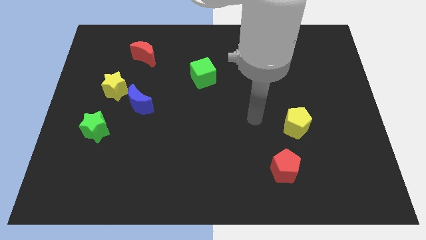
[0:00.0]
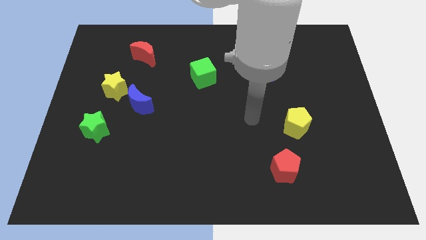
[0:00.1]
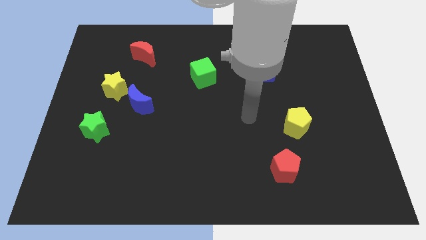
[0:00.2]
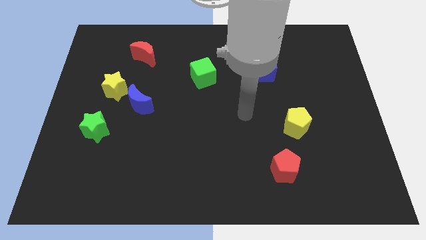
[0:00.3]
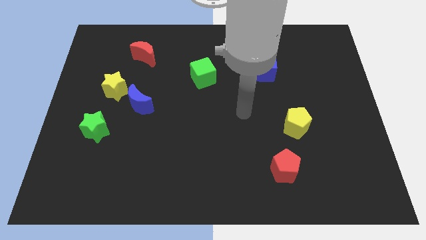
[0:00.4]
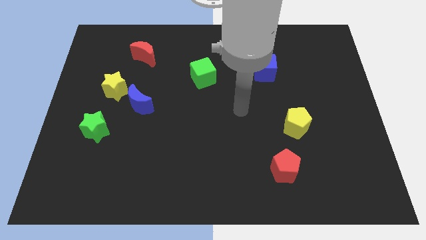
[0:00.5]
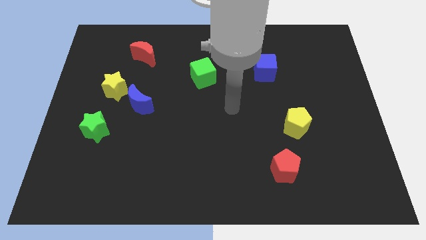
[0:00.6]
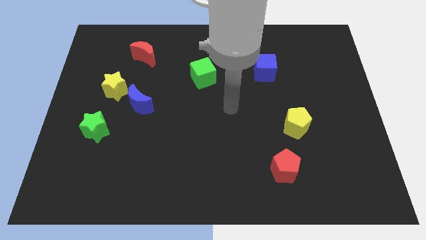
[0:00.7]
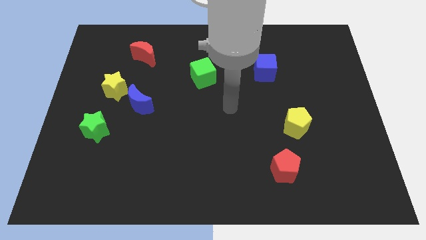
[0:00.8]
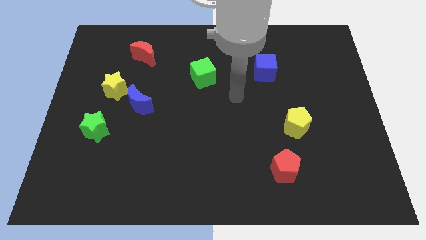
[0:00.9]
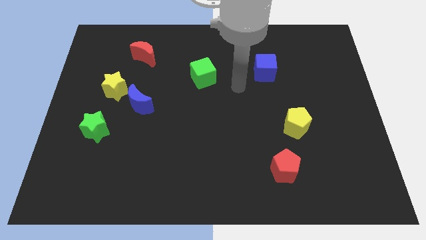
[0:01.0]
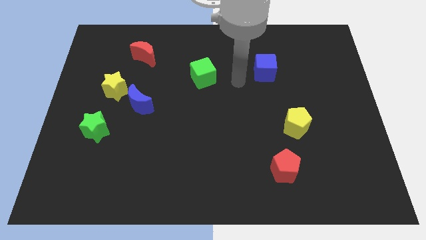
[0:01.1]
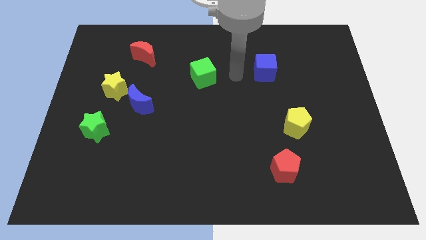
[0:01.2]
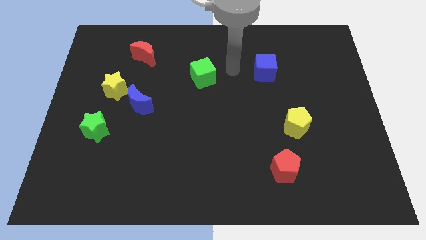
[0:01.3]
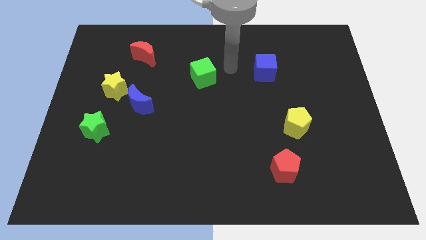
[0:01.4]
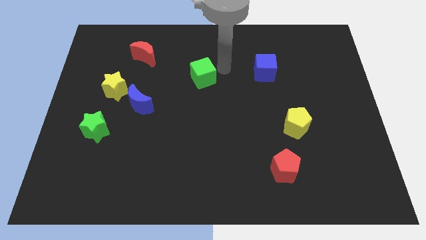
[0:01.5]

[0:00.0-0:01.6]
move your arm towards the green cube

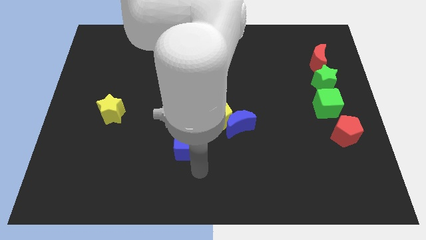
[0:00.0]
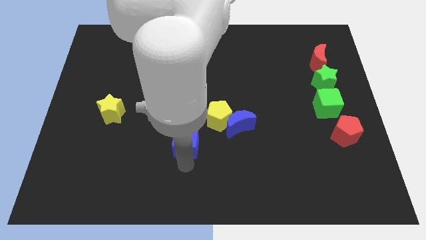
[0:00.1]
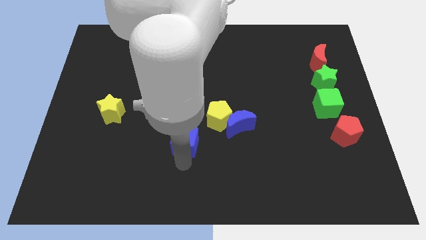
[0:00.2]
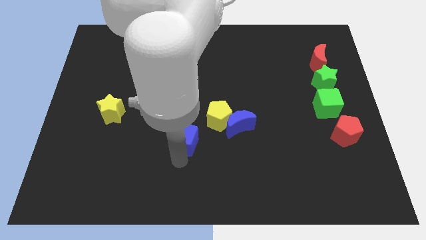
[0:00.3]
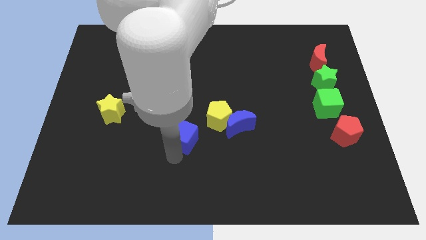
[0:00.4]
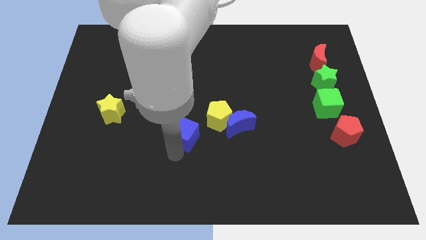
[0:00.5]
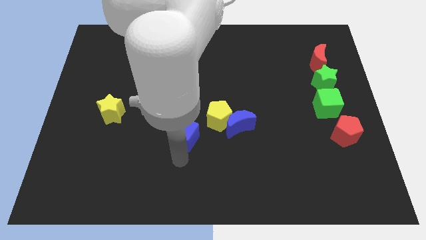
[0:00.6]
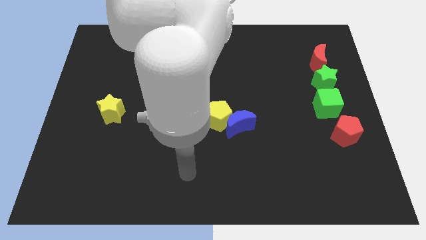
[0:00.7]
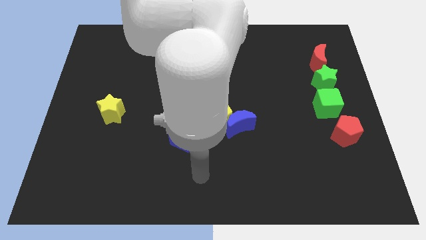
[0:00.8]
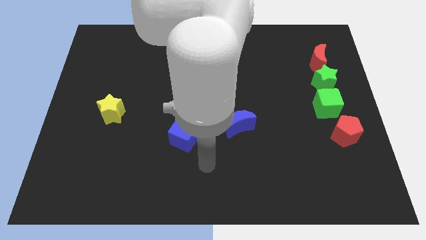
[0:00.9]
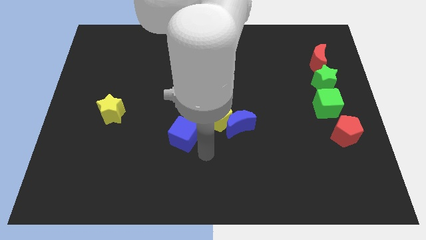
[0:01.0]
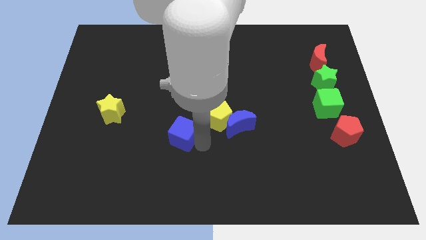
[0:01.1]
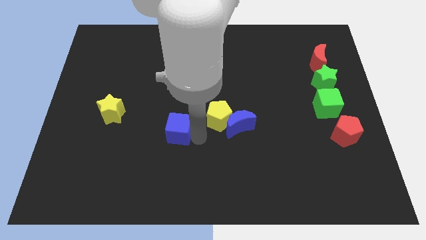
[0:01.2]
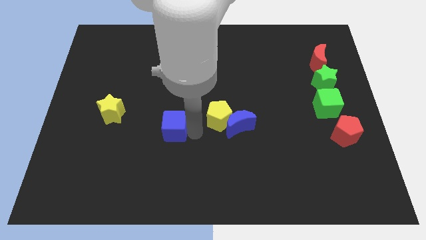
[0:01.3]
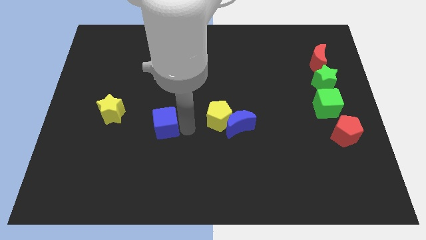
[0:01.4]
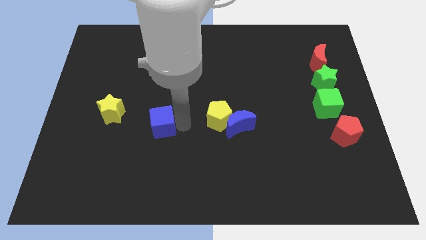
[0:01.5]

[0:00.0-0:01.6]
move the blue cube slightly upward

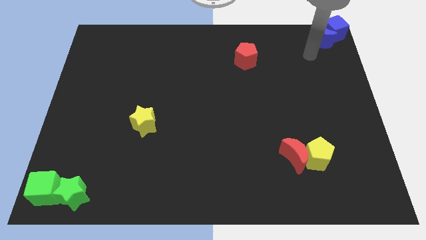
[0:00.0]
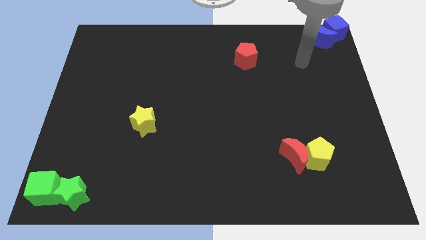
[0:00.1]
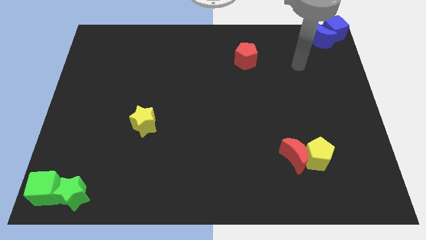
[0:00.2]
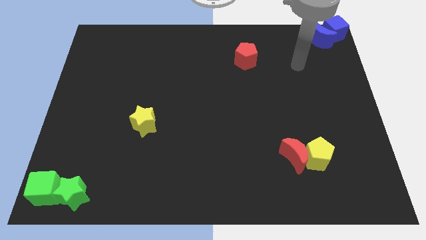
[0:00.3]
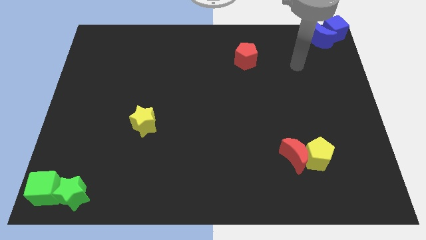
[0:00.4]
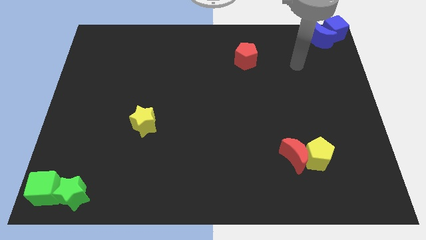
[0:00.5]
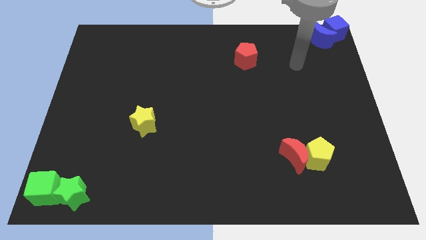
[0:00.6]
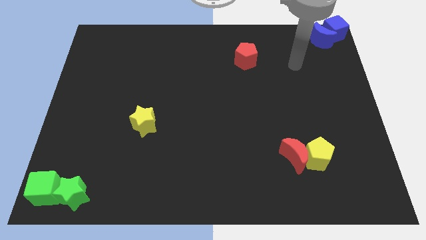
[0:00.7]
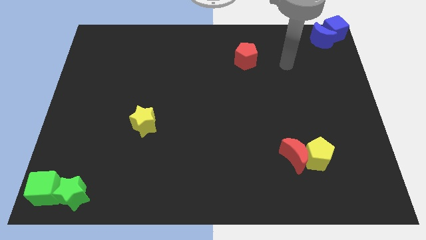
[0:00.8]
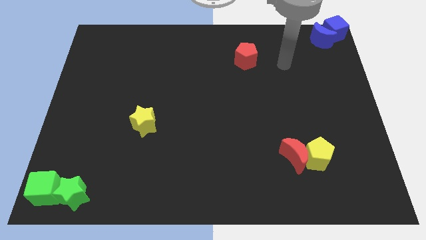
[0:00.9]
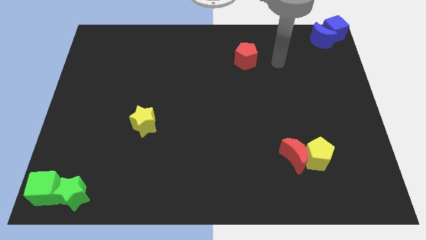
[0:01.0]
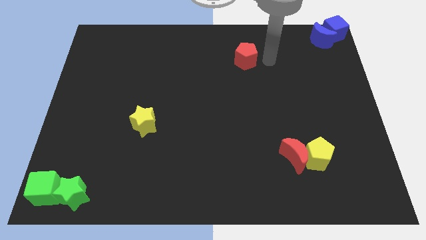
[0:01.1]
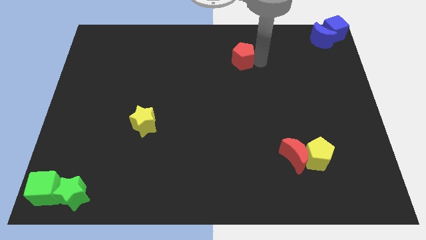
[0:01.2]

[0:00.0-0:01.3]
move your arm to the right of the red pentagon

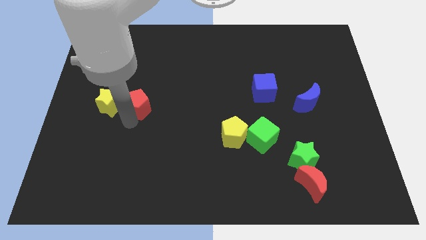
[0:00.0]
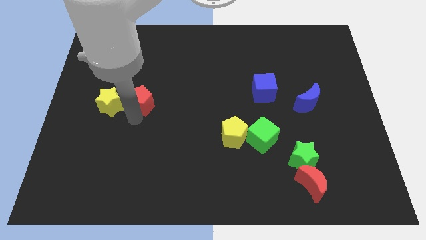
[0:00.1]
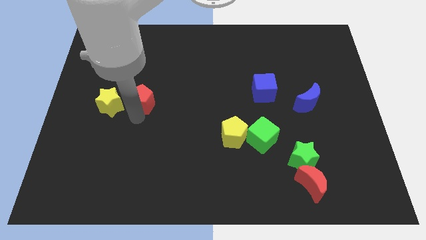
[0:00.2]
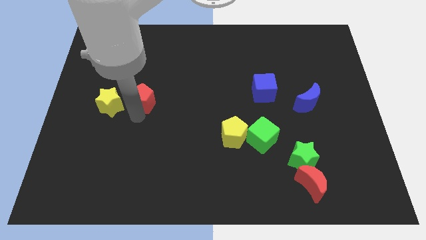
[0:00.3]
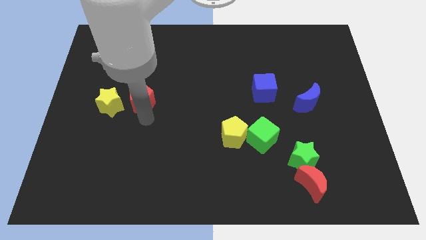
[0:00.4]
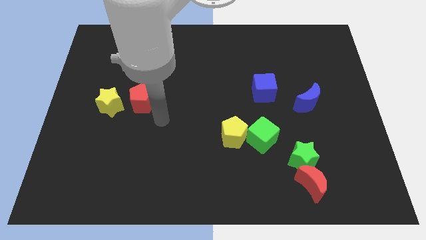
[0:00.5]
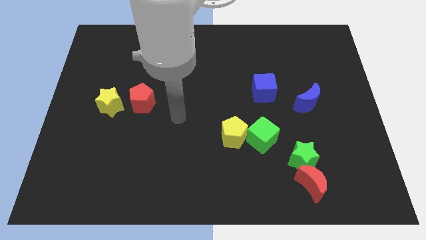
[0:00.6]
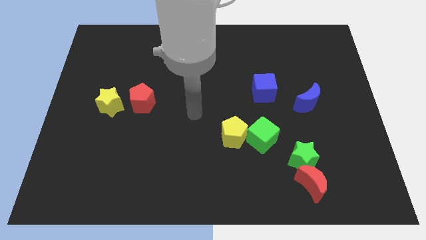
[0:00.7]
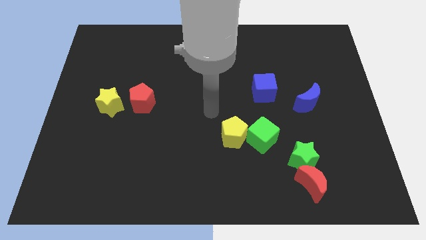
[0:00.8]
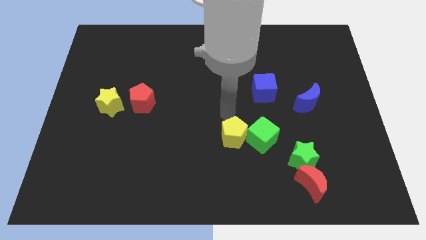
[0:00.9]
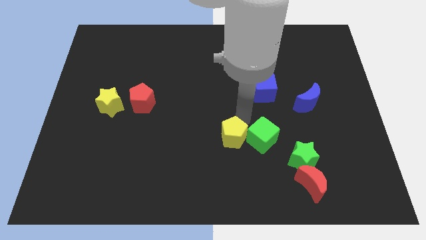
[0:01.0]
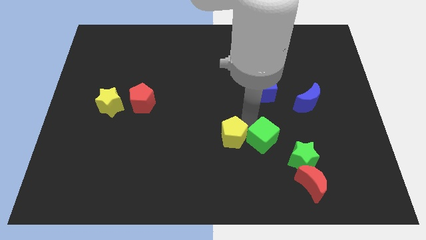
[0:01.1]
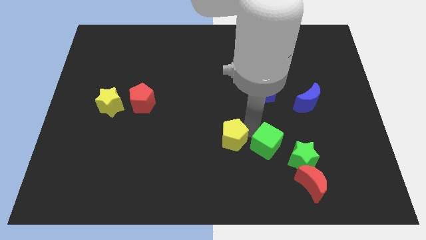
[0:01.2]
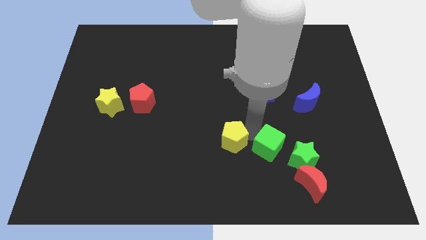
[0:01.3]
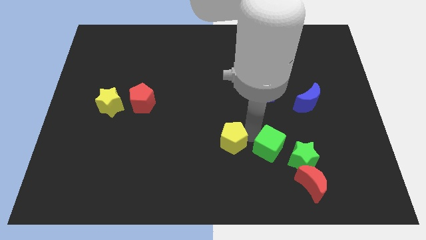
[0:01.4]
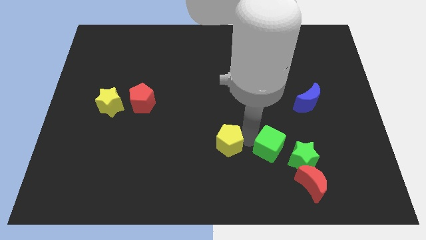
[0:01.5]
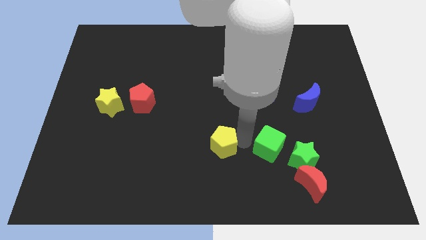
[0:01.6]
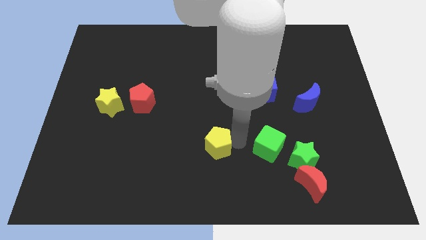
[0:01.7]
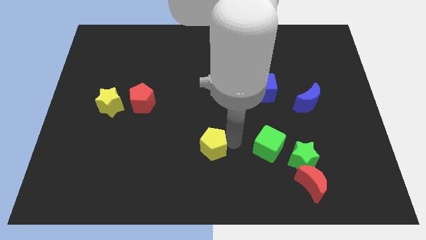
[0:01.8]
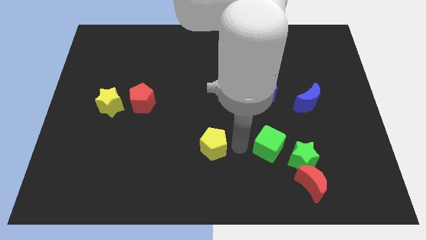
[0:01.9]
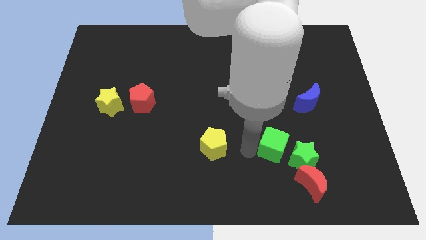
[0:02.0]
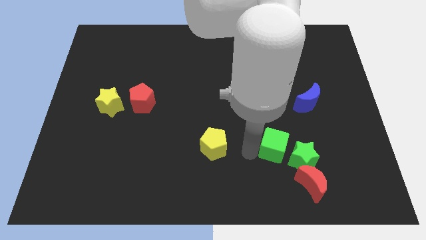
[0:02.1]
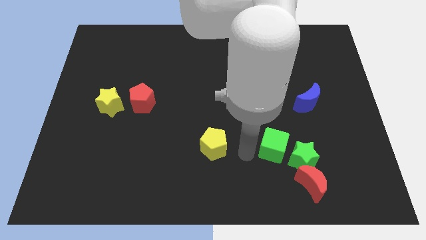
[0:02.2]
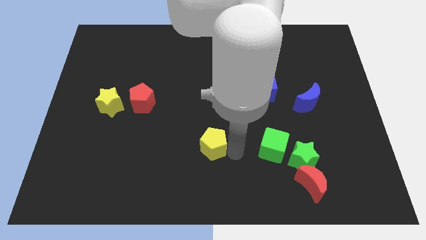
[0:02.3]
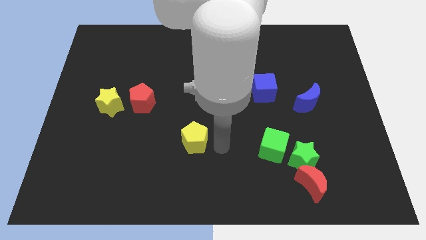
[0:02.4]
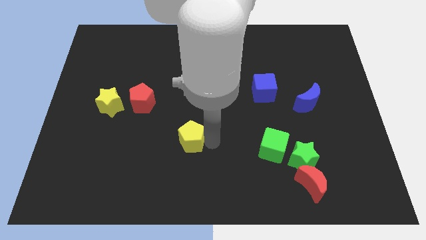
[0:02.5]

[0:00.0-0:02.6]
seperate the green cube and yellow pentagon

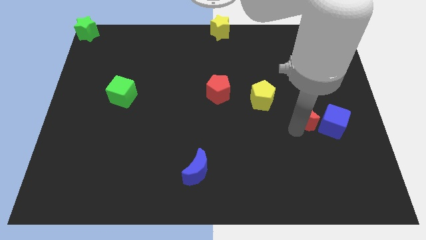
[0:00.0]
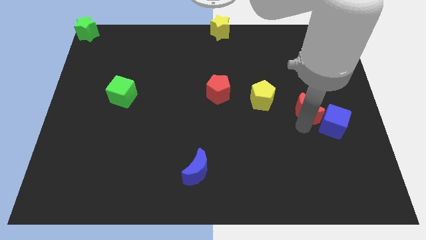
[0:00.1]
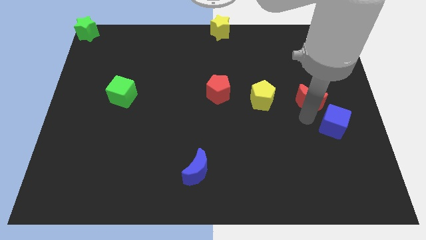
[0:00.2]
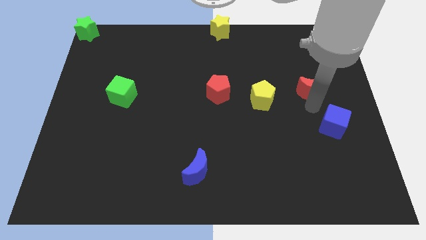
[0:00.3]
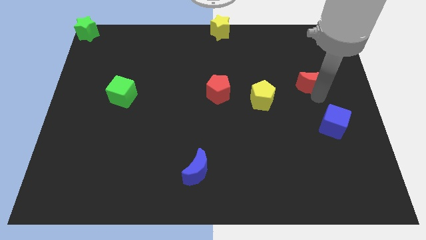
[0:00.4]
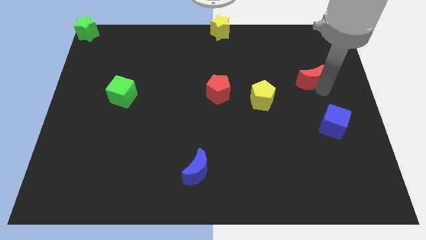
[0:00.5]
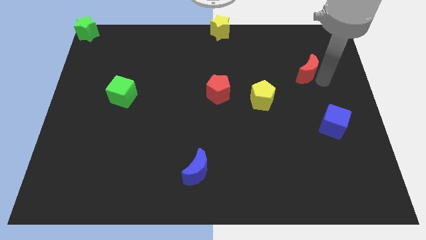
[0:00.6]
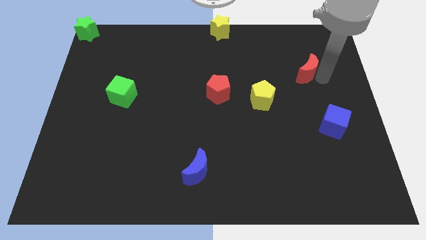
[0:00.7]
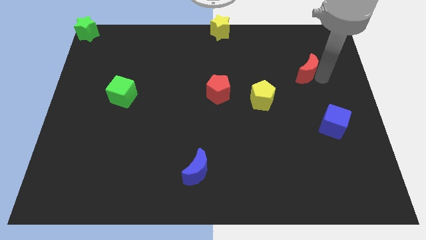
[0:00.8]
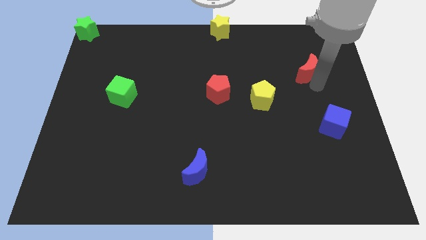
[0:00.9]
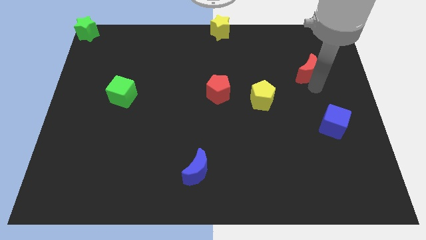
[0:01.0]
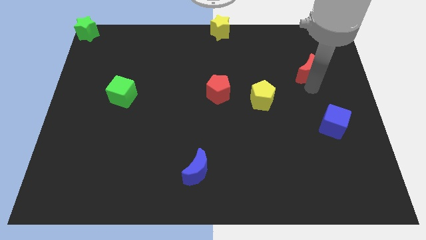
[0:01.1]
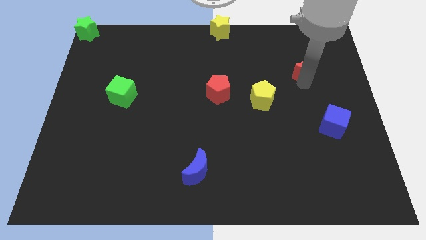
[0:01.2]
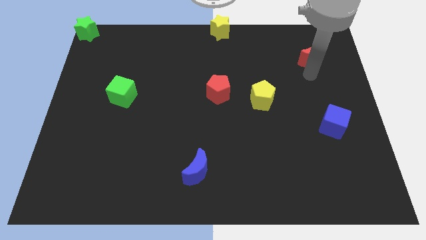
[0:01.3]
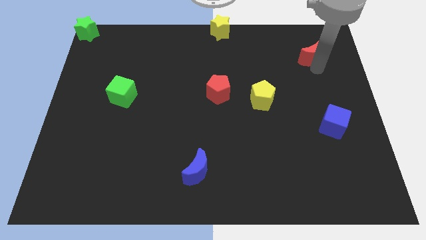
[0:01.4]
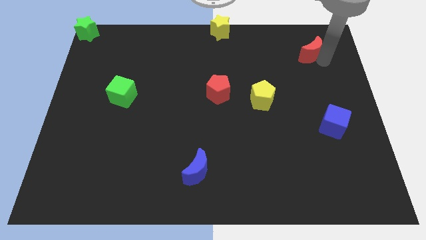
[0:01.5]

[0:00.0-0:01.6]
move the red crescent diagonal to the yellow pentagon

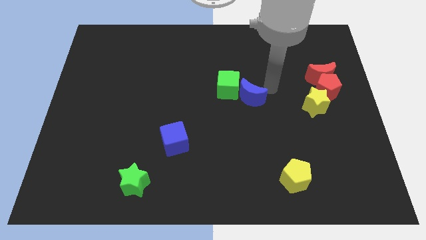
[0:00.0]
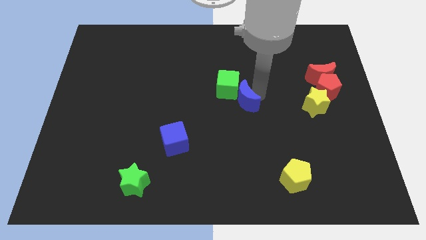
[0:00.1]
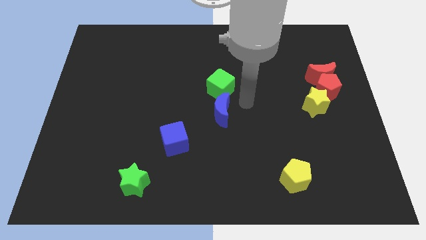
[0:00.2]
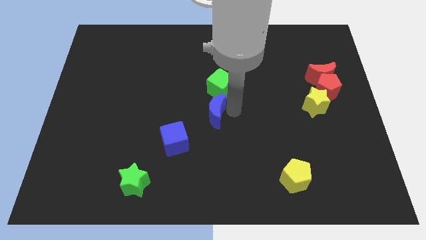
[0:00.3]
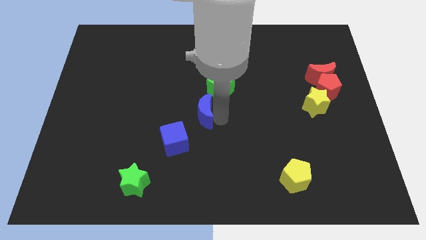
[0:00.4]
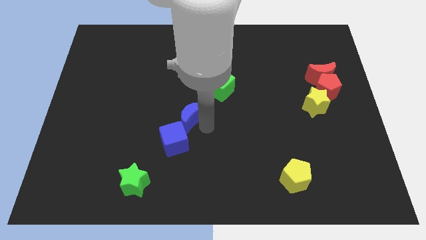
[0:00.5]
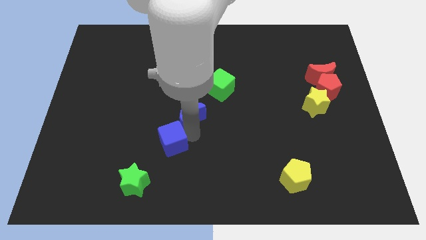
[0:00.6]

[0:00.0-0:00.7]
push the blue moon into the blue cube
